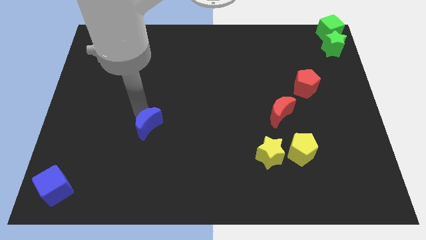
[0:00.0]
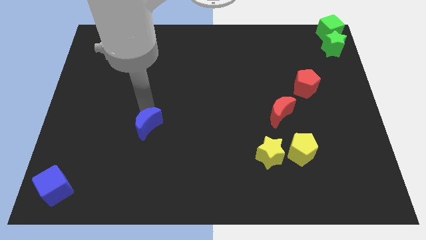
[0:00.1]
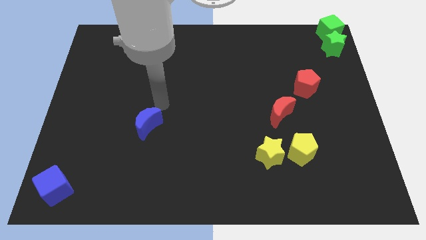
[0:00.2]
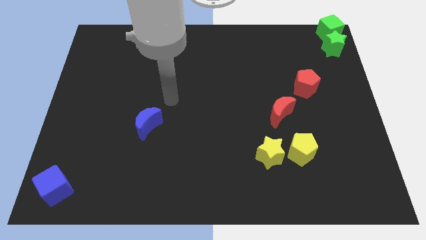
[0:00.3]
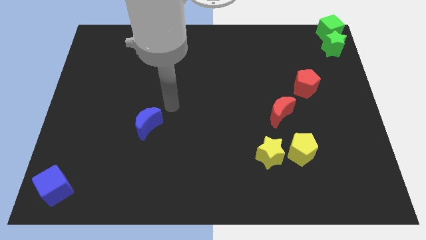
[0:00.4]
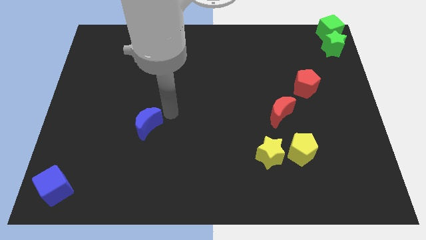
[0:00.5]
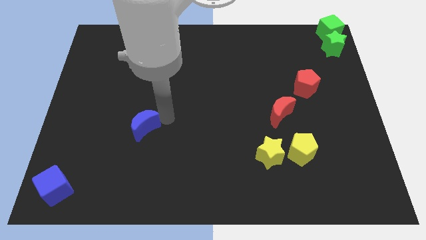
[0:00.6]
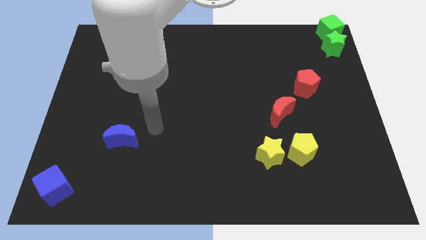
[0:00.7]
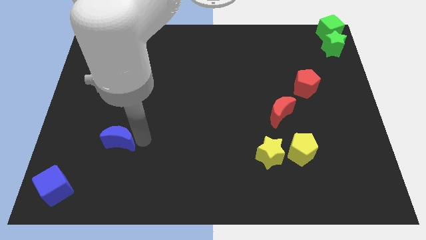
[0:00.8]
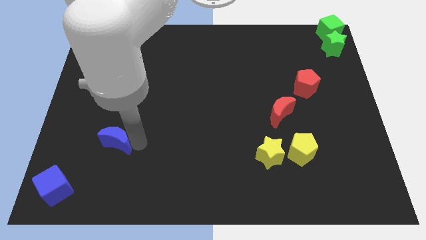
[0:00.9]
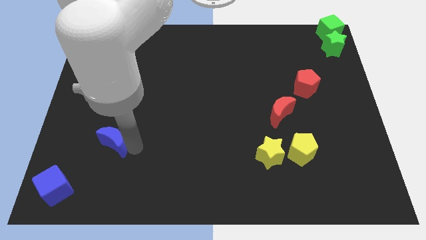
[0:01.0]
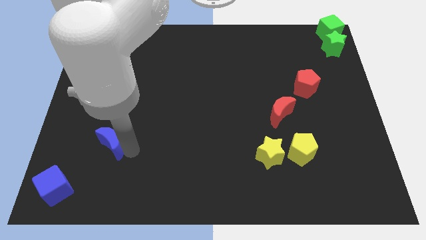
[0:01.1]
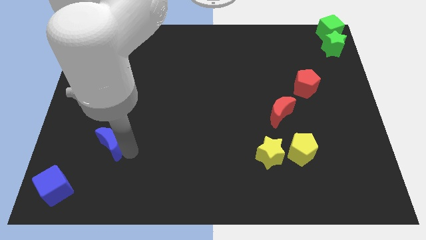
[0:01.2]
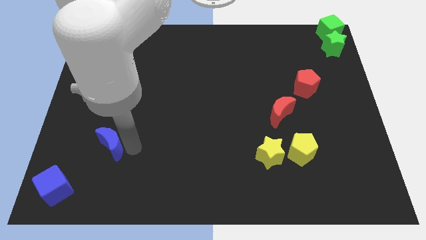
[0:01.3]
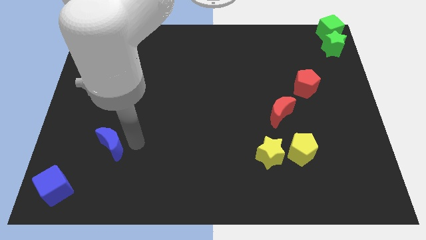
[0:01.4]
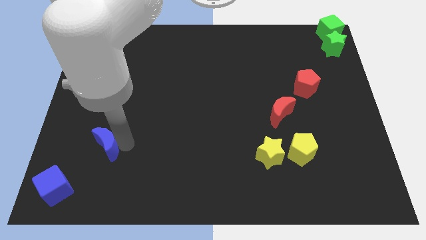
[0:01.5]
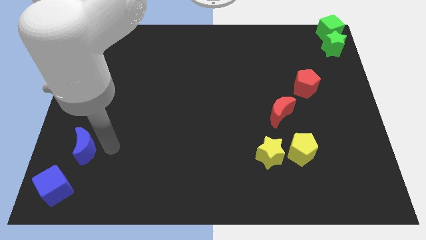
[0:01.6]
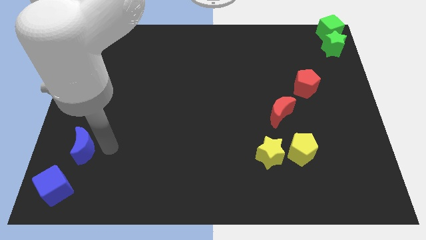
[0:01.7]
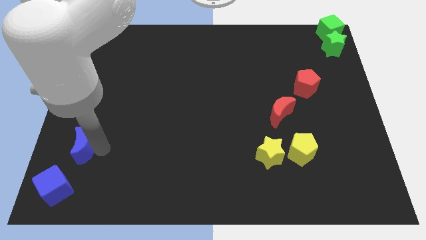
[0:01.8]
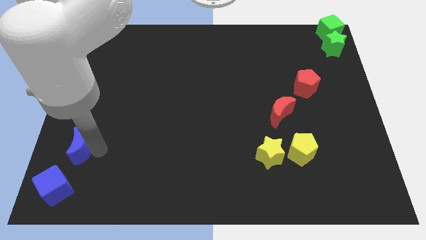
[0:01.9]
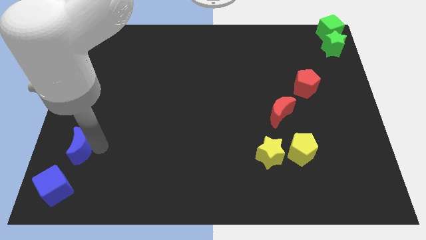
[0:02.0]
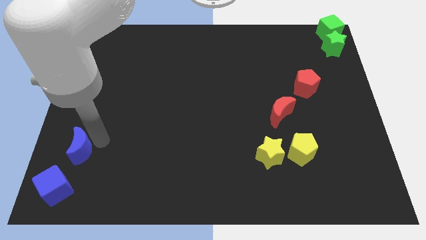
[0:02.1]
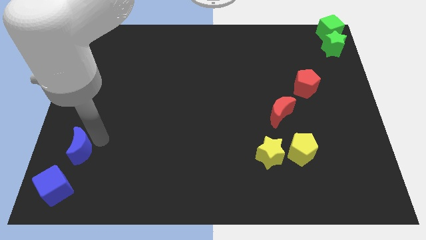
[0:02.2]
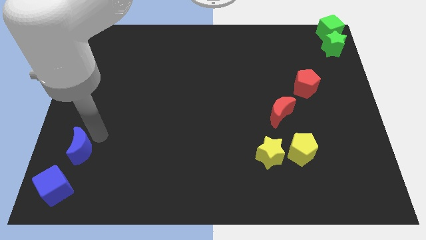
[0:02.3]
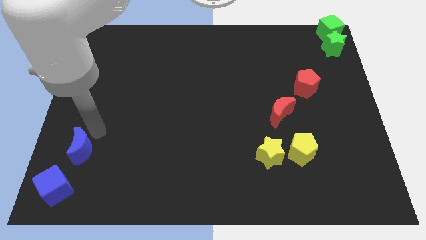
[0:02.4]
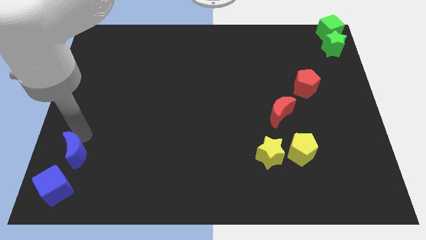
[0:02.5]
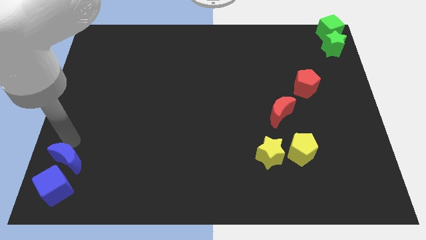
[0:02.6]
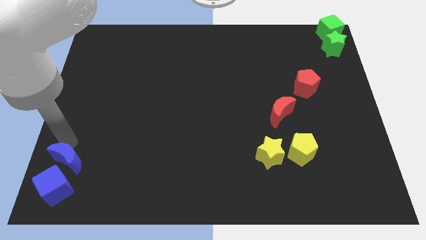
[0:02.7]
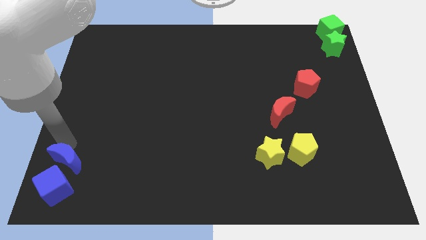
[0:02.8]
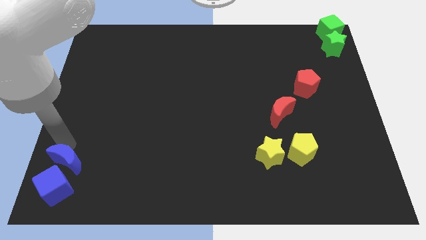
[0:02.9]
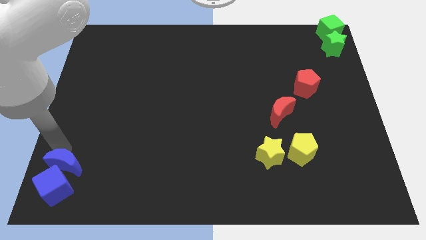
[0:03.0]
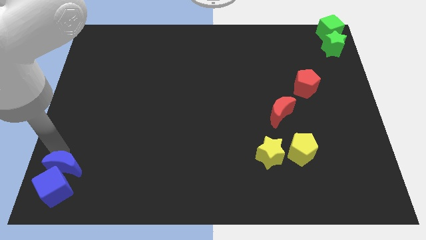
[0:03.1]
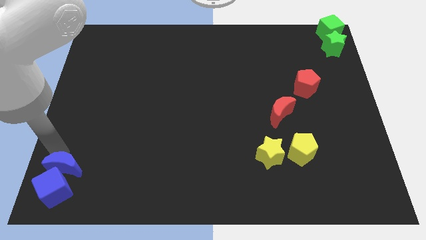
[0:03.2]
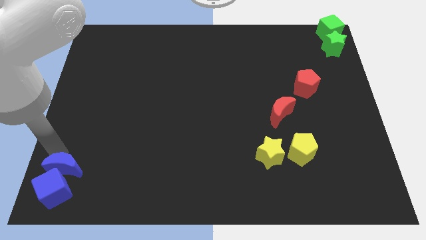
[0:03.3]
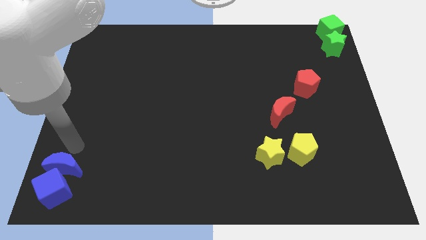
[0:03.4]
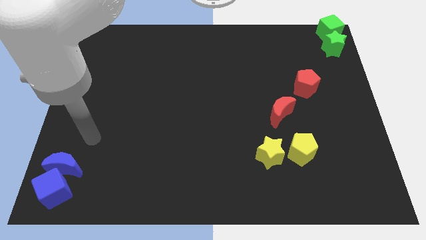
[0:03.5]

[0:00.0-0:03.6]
group up the blue blocks at the bottom left corner of the board

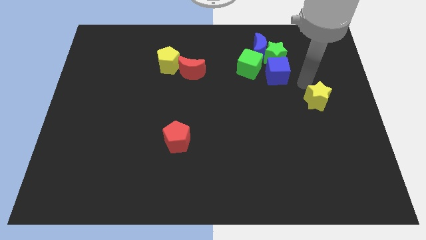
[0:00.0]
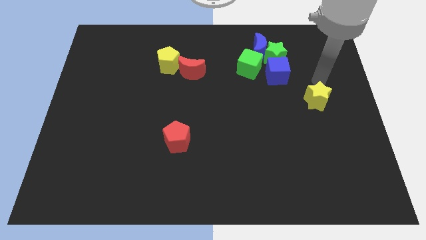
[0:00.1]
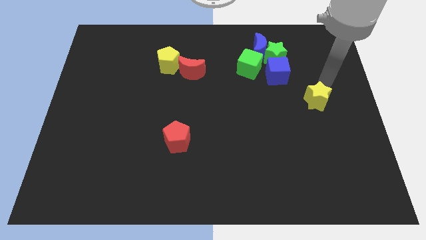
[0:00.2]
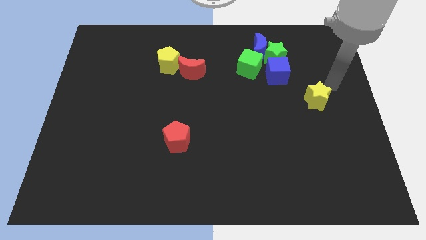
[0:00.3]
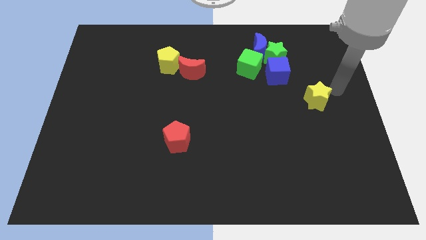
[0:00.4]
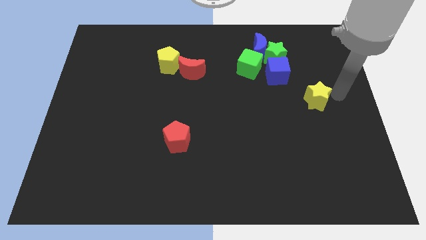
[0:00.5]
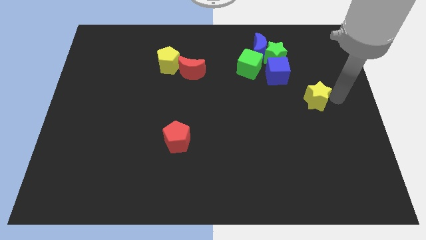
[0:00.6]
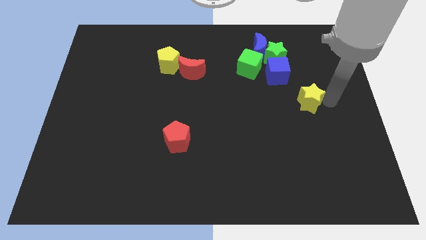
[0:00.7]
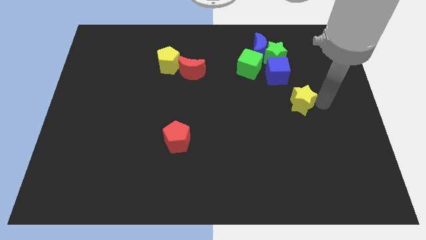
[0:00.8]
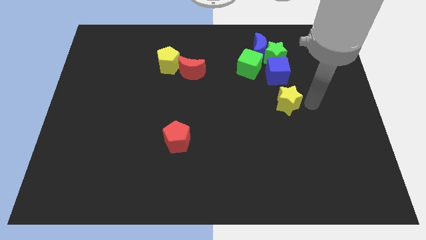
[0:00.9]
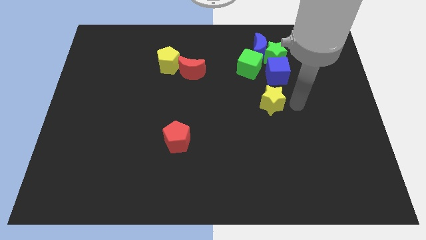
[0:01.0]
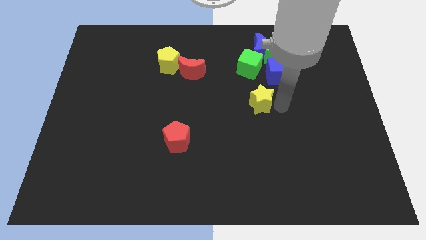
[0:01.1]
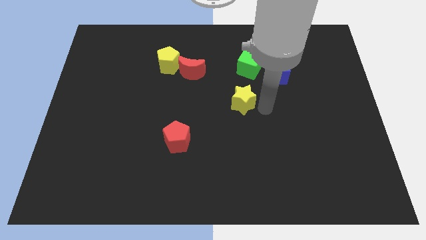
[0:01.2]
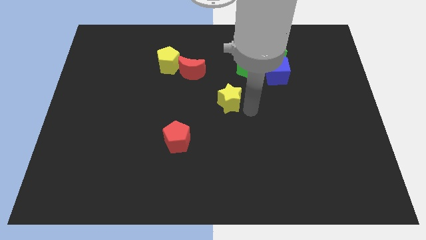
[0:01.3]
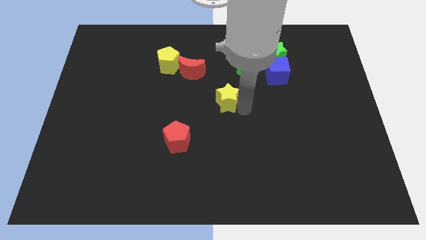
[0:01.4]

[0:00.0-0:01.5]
move the yellow star to the center of the board

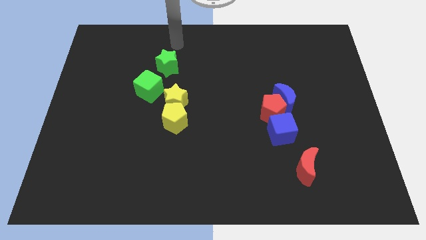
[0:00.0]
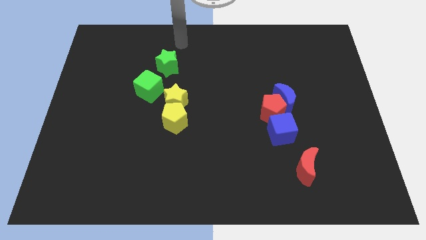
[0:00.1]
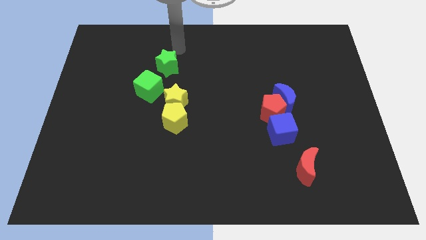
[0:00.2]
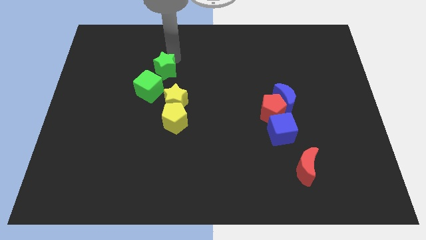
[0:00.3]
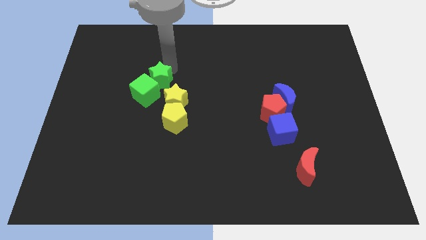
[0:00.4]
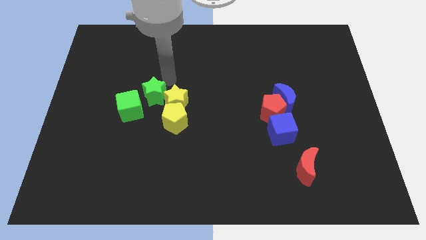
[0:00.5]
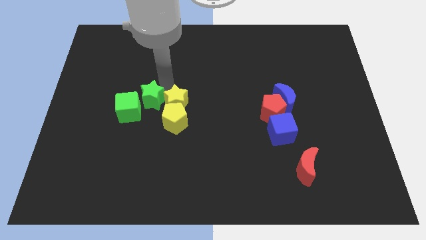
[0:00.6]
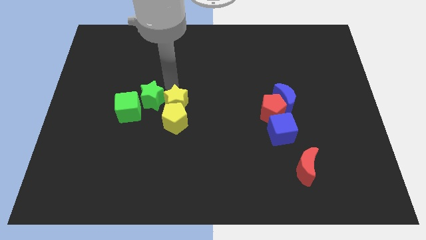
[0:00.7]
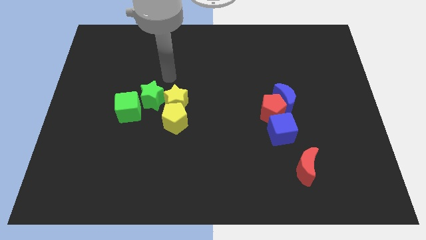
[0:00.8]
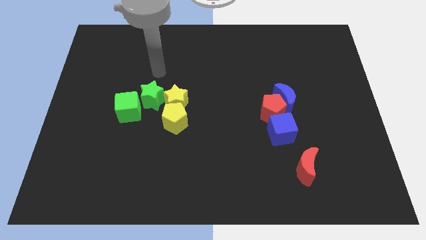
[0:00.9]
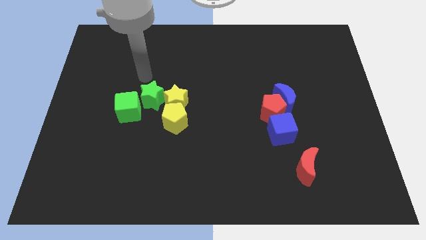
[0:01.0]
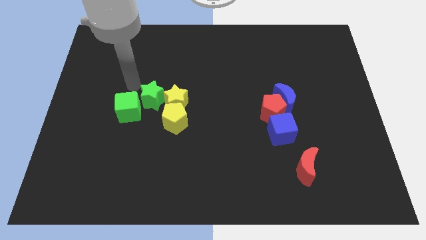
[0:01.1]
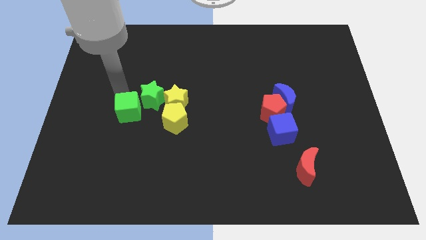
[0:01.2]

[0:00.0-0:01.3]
move green star to the left side of the yellow star

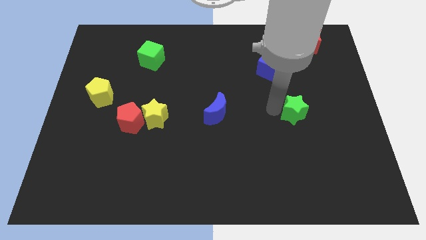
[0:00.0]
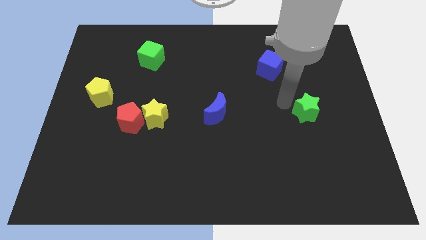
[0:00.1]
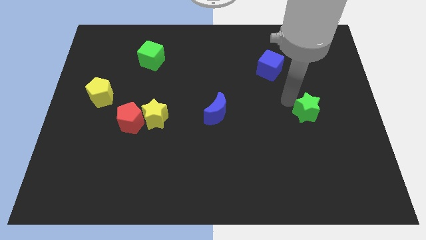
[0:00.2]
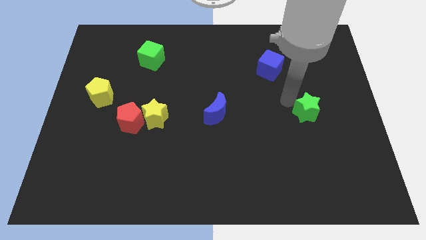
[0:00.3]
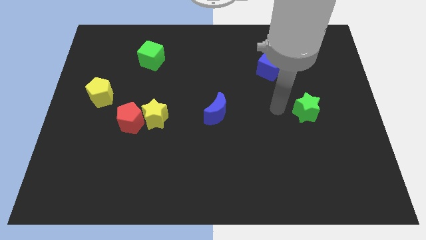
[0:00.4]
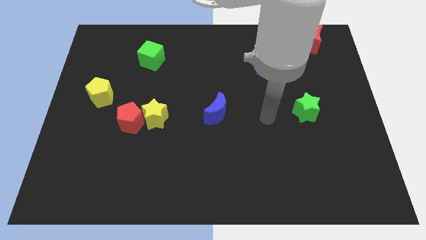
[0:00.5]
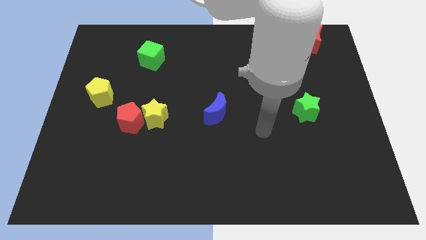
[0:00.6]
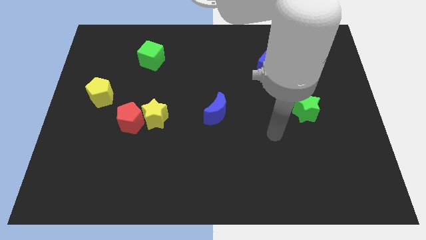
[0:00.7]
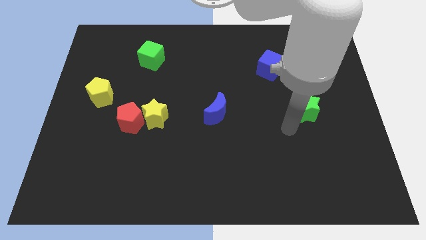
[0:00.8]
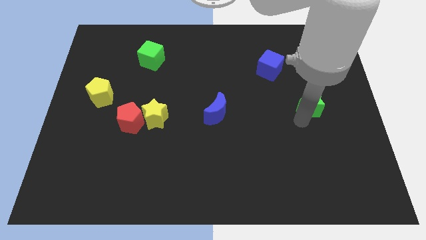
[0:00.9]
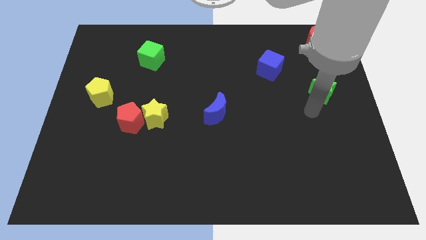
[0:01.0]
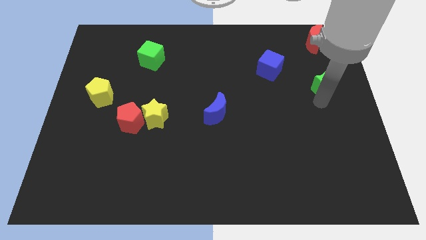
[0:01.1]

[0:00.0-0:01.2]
place the green star below the red moon

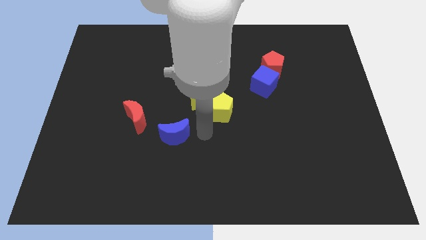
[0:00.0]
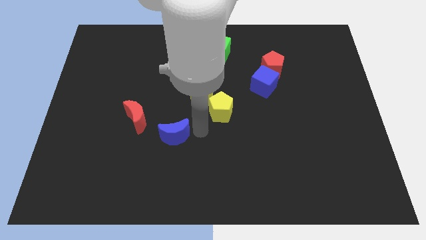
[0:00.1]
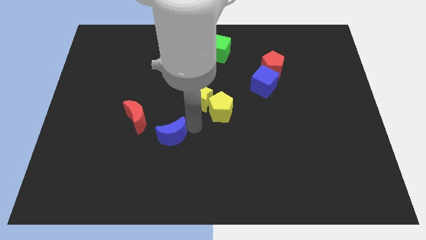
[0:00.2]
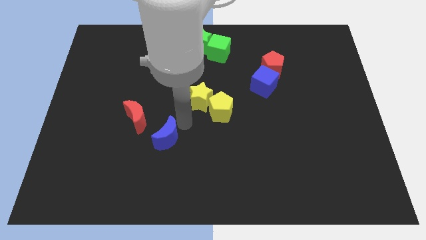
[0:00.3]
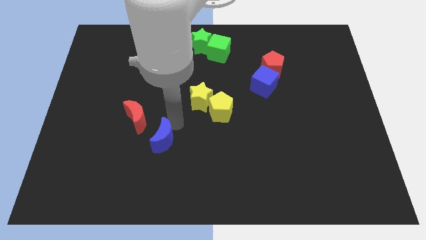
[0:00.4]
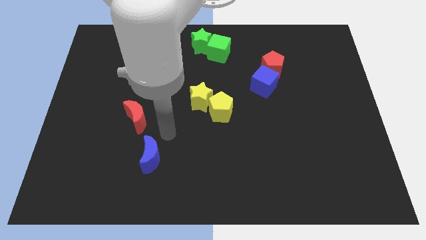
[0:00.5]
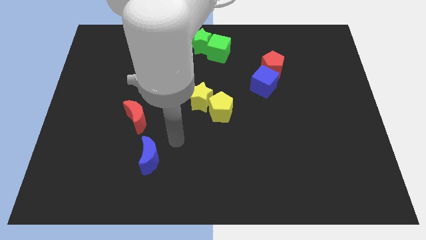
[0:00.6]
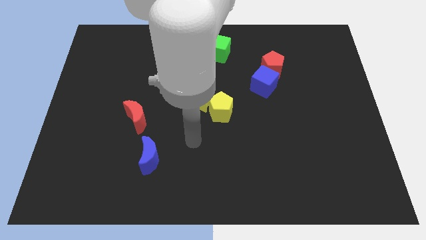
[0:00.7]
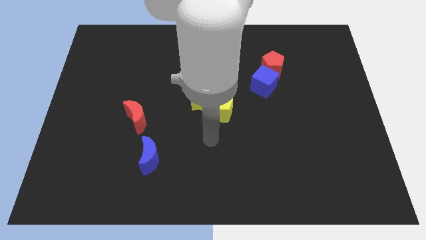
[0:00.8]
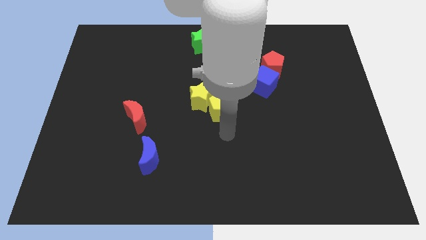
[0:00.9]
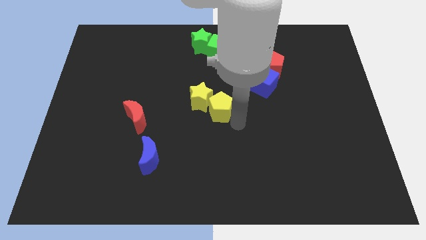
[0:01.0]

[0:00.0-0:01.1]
move the blue crescent to the bottom of the red crescent

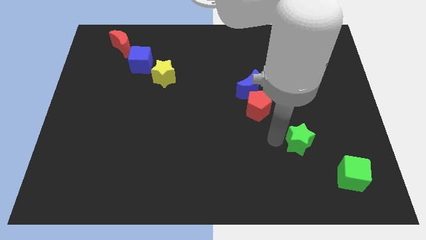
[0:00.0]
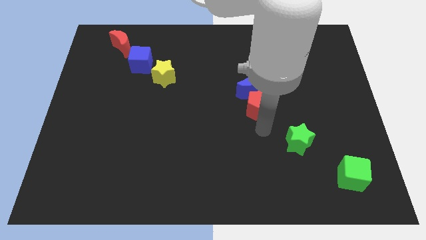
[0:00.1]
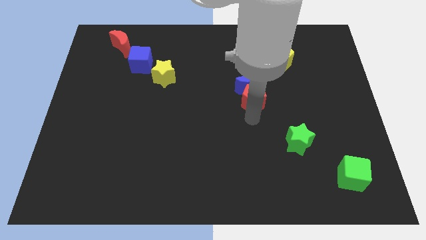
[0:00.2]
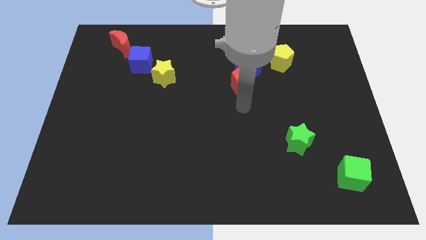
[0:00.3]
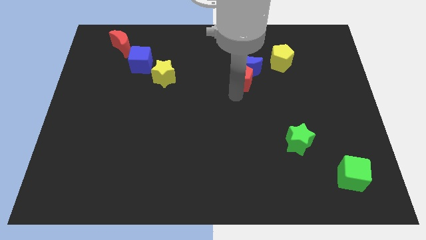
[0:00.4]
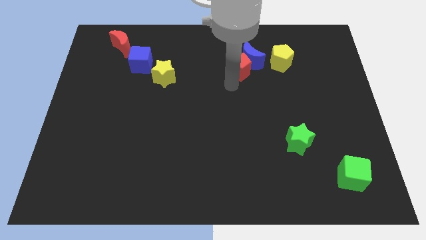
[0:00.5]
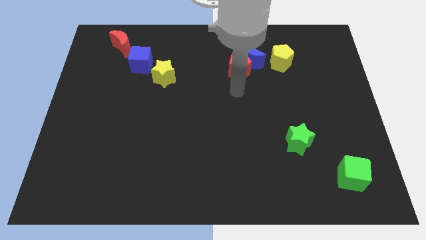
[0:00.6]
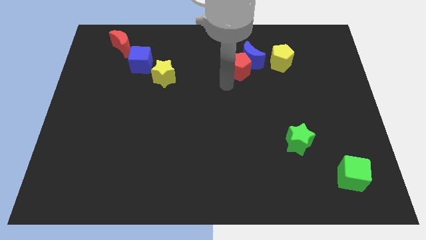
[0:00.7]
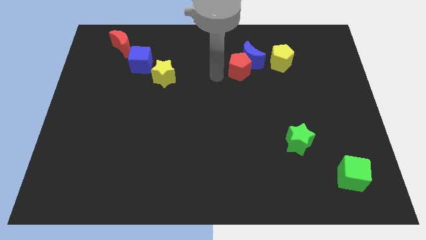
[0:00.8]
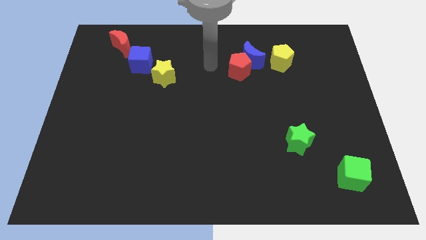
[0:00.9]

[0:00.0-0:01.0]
move the red pentagon along with the blue crescent towards yellow pentagon
